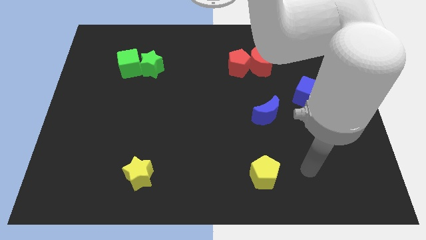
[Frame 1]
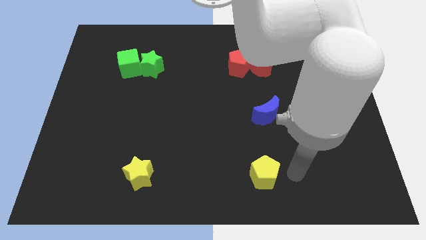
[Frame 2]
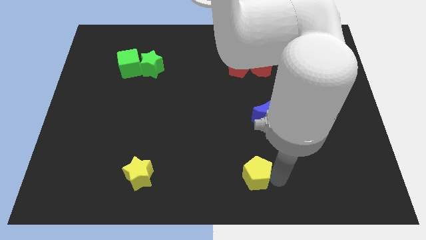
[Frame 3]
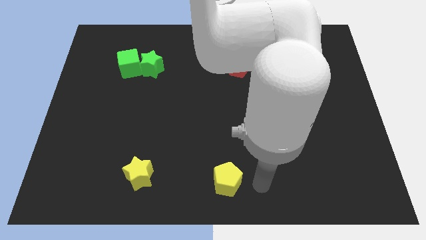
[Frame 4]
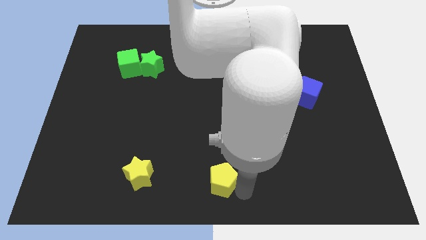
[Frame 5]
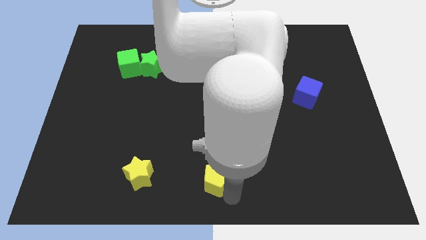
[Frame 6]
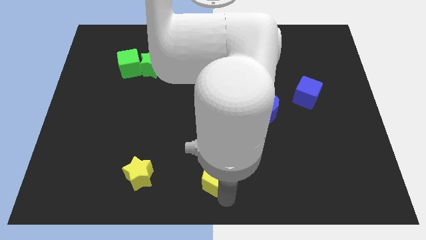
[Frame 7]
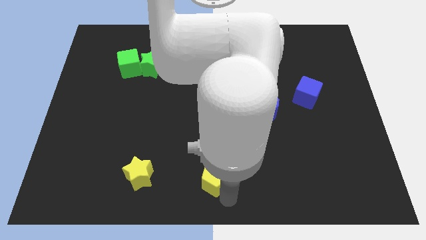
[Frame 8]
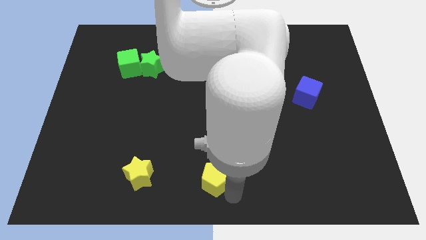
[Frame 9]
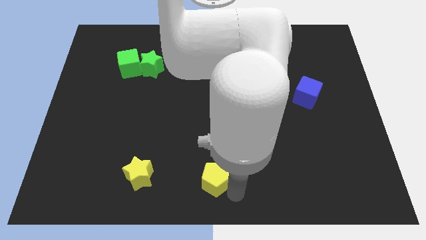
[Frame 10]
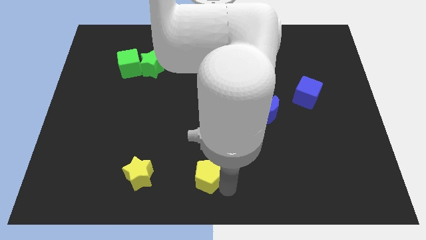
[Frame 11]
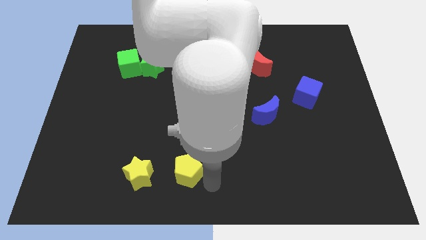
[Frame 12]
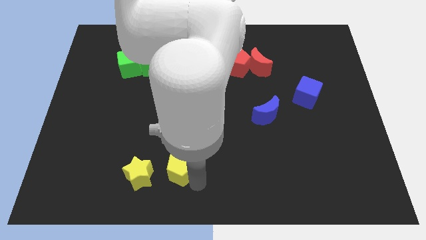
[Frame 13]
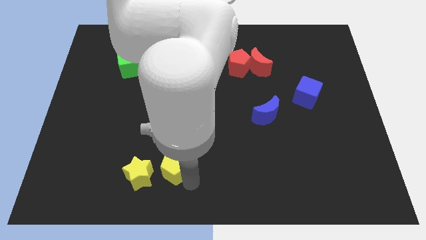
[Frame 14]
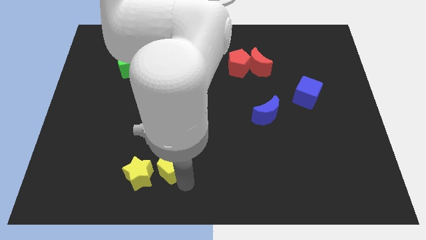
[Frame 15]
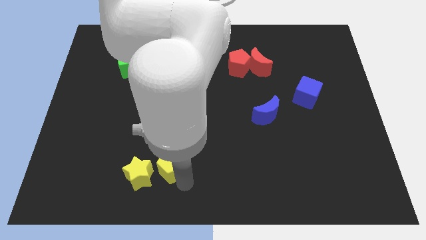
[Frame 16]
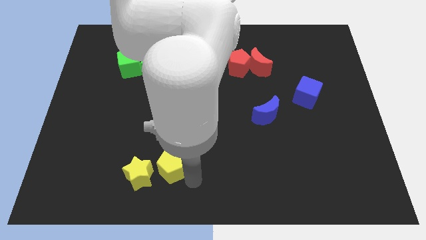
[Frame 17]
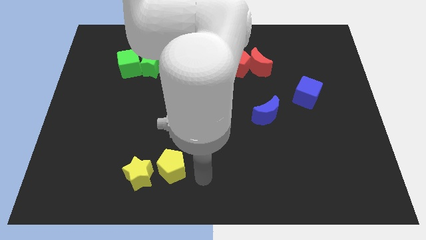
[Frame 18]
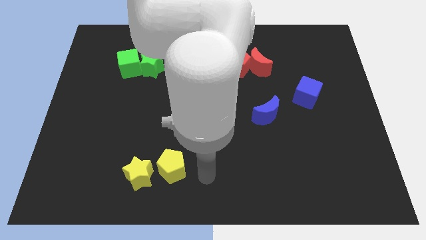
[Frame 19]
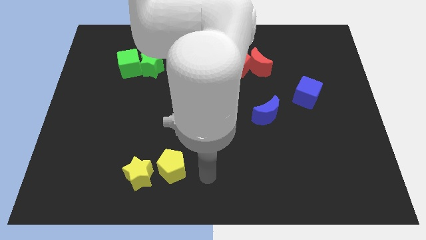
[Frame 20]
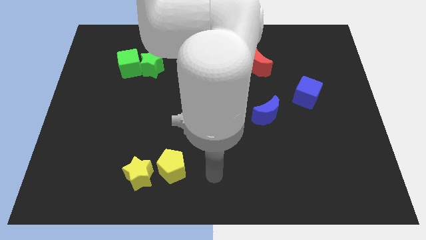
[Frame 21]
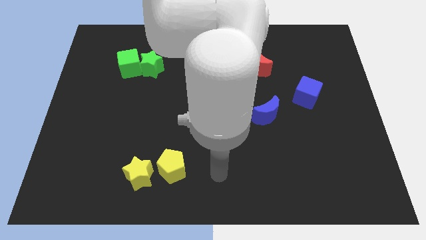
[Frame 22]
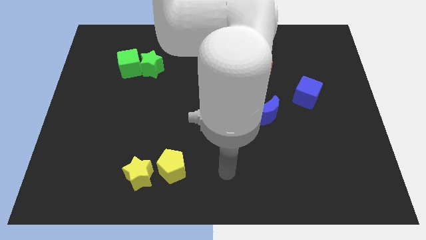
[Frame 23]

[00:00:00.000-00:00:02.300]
push the yellow pentagon close to the yellow star

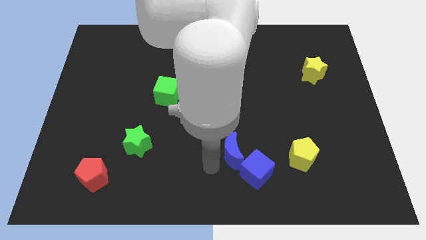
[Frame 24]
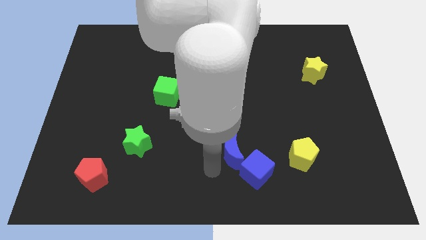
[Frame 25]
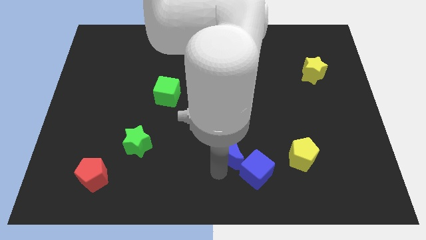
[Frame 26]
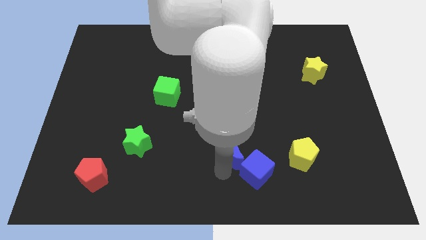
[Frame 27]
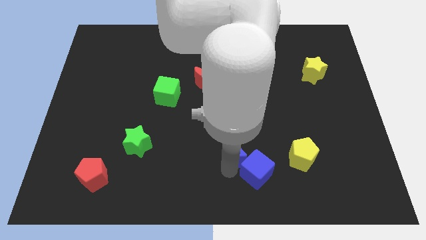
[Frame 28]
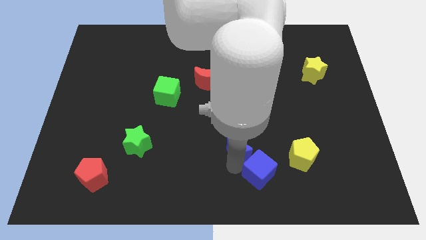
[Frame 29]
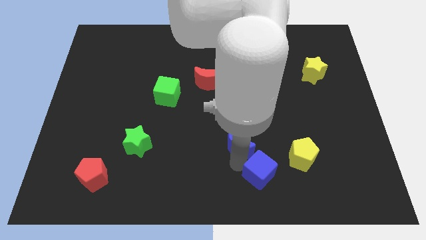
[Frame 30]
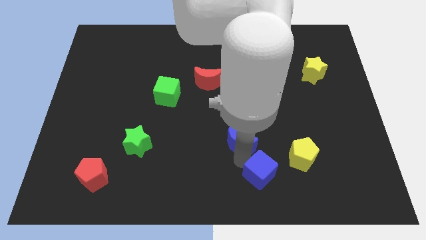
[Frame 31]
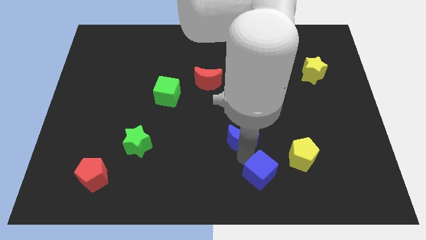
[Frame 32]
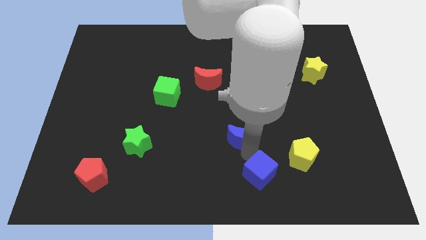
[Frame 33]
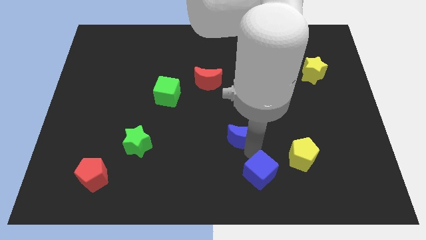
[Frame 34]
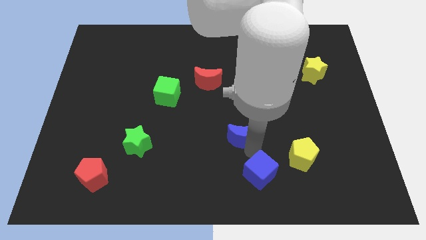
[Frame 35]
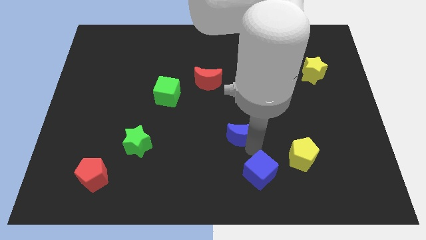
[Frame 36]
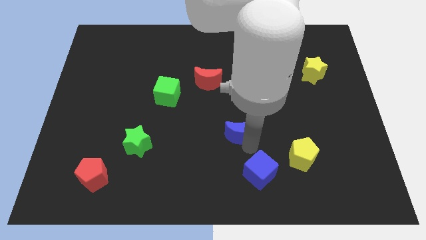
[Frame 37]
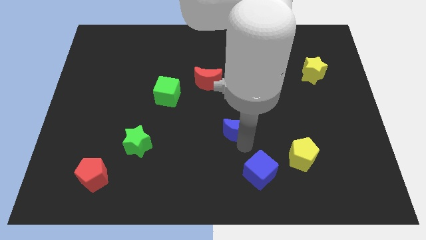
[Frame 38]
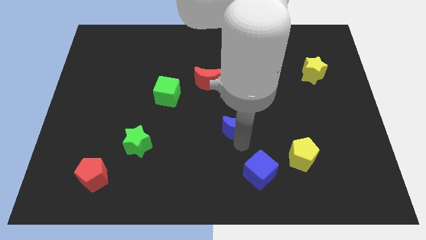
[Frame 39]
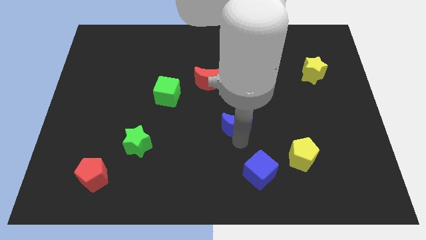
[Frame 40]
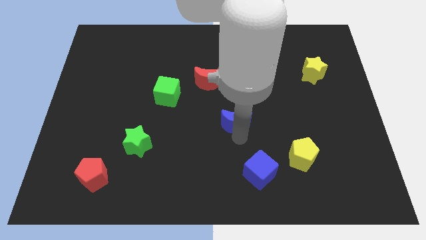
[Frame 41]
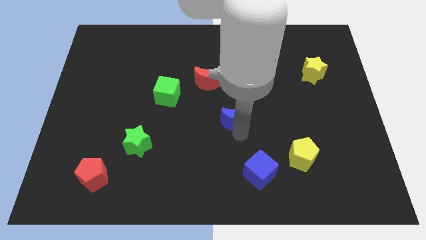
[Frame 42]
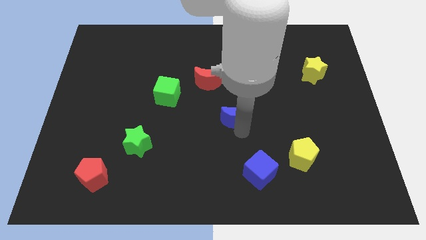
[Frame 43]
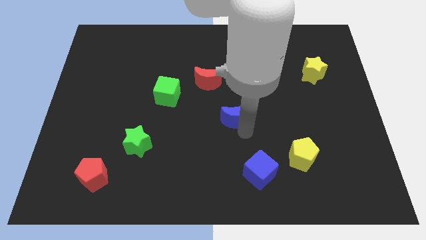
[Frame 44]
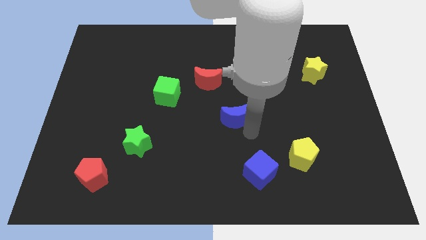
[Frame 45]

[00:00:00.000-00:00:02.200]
seperate blue cube and blue crescent

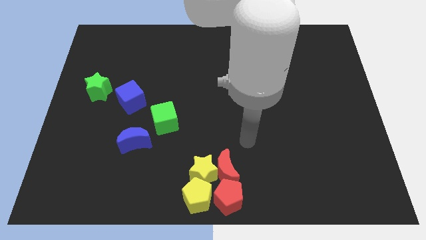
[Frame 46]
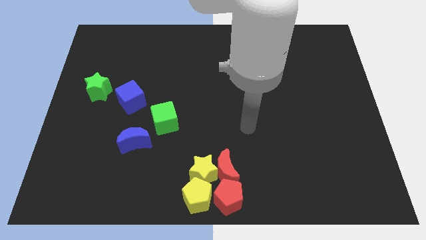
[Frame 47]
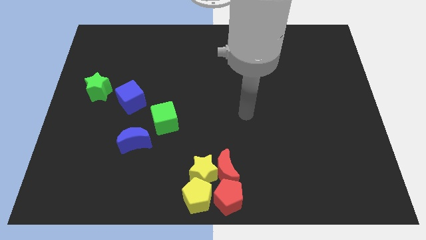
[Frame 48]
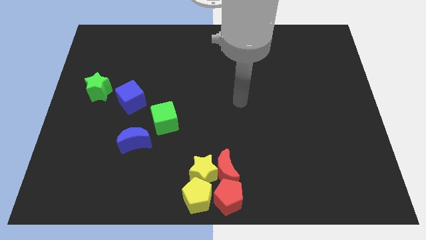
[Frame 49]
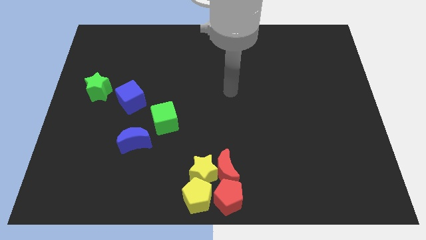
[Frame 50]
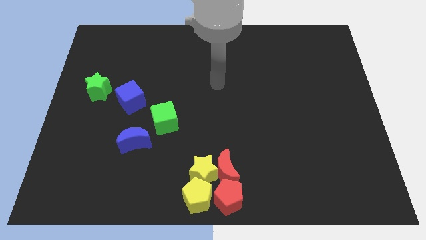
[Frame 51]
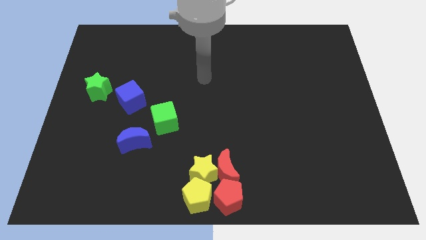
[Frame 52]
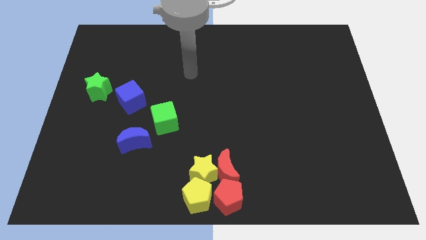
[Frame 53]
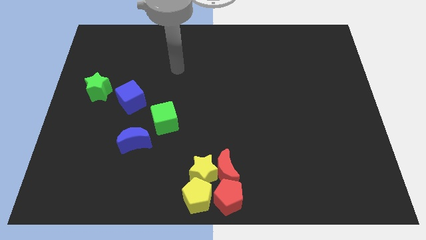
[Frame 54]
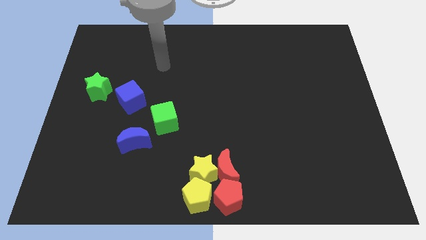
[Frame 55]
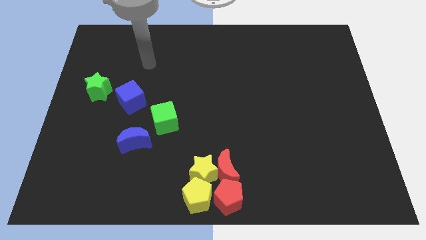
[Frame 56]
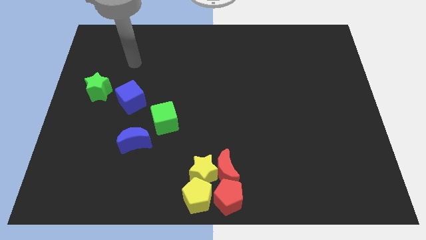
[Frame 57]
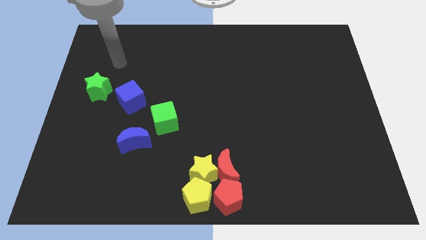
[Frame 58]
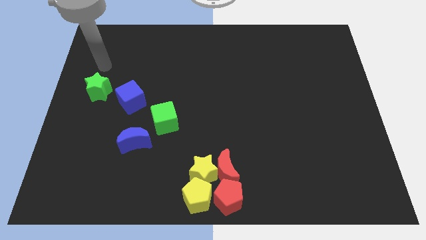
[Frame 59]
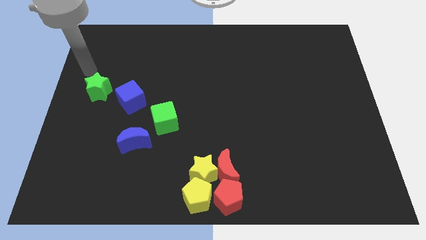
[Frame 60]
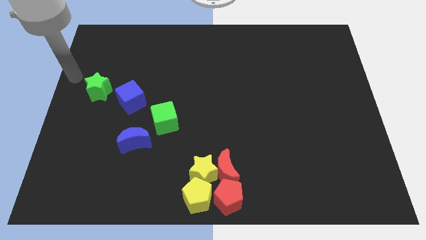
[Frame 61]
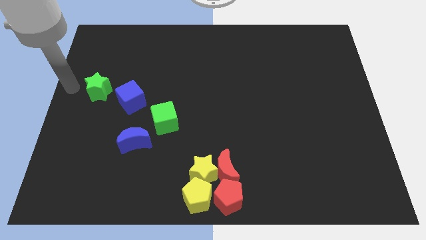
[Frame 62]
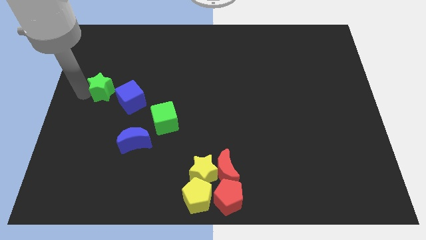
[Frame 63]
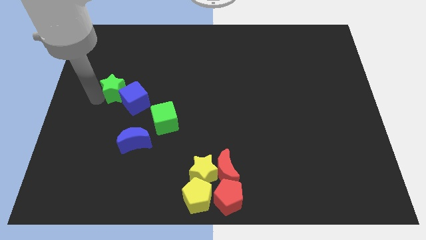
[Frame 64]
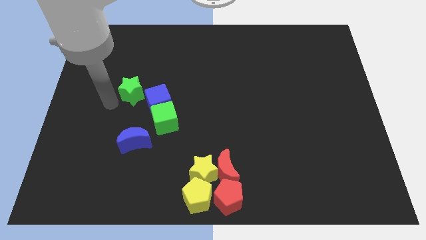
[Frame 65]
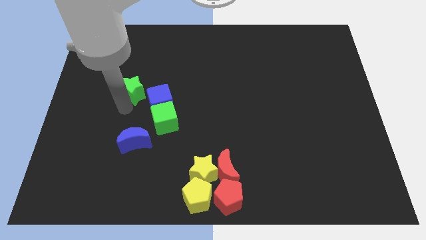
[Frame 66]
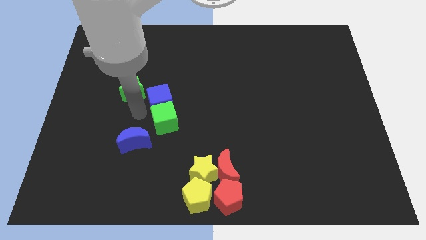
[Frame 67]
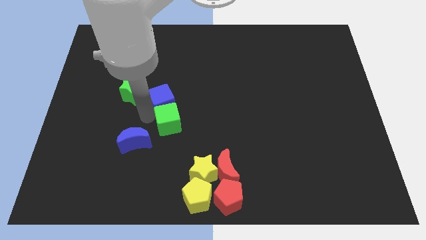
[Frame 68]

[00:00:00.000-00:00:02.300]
point your arm left to green cube

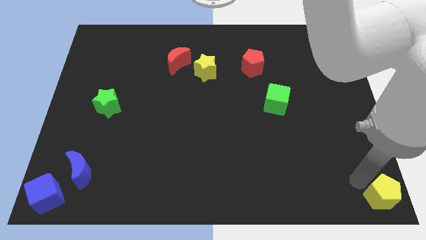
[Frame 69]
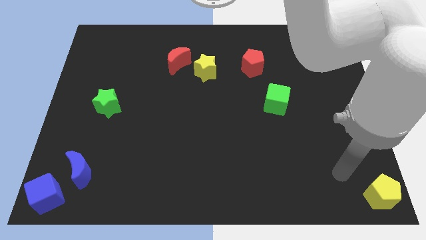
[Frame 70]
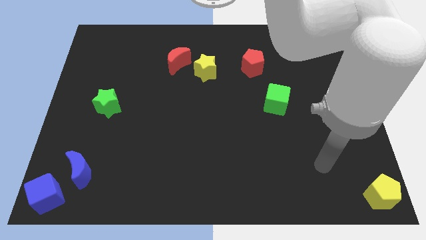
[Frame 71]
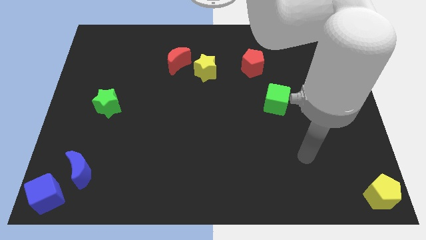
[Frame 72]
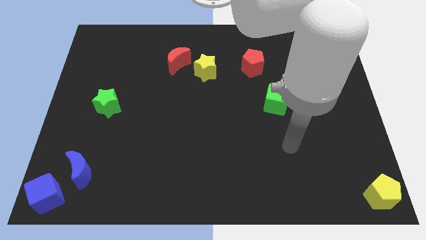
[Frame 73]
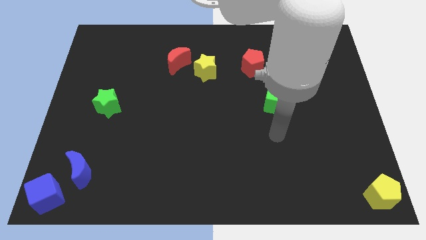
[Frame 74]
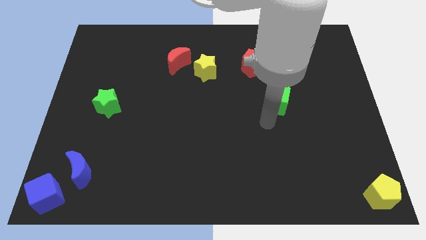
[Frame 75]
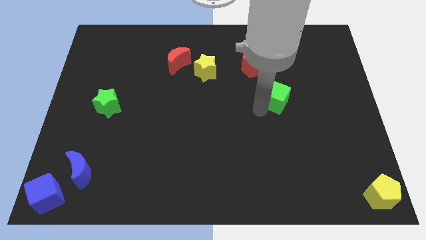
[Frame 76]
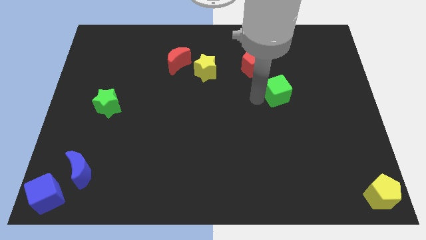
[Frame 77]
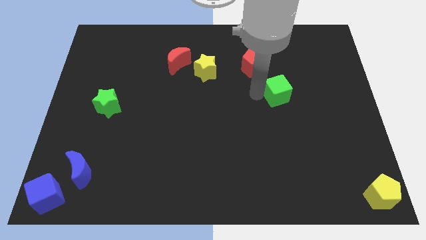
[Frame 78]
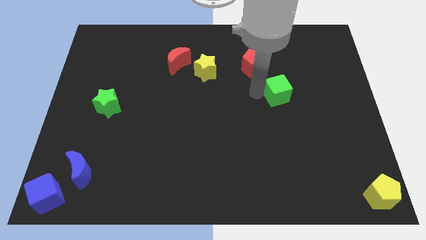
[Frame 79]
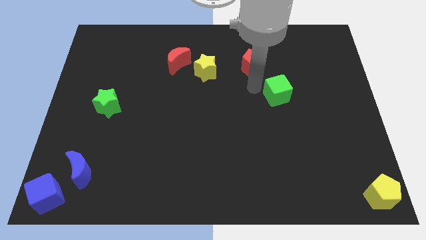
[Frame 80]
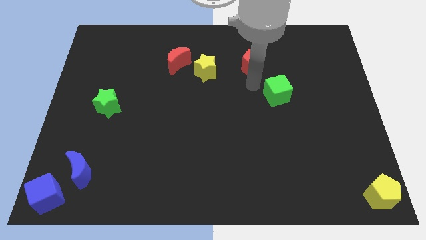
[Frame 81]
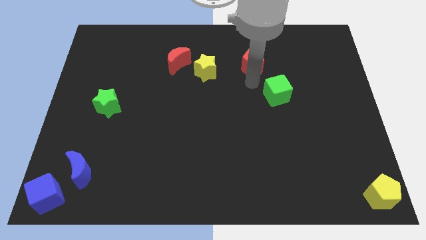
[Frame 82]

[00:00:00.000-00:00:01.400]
slightly touch left to the green cube

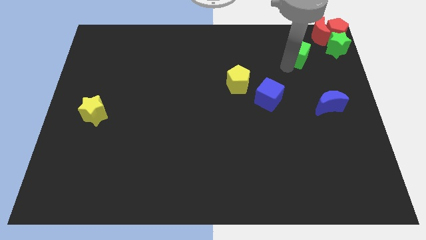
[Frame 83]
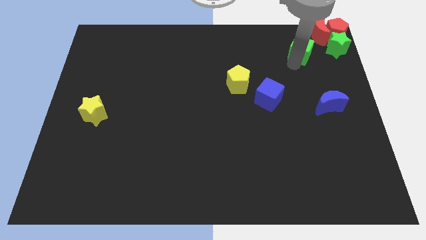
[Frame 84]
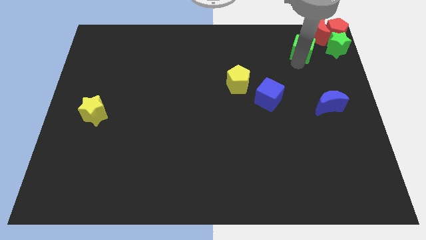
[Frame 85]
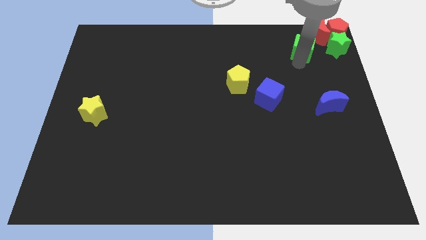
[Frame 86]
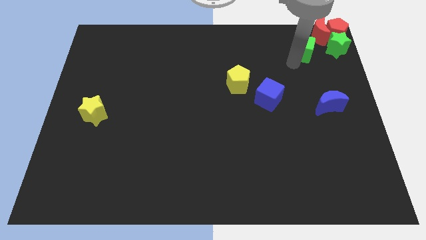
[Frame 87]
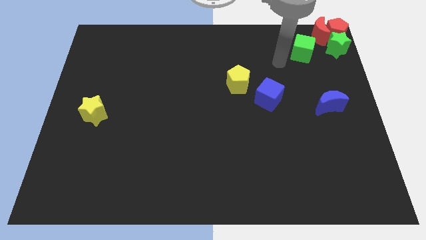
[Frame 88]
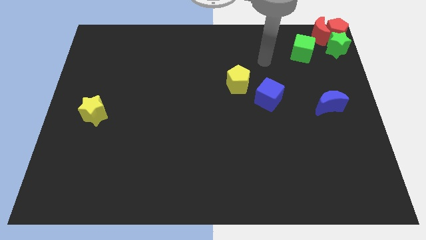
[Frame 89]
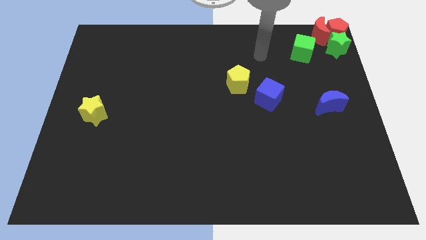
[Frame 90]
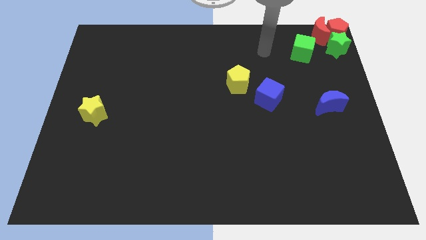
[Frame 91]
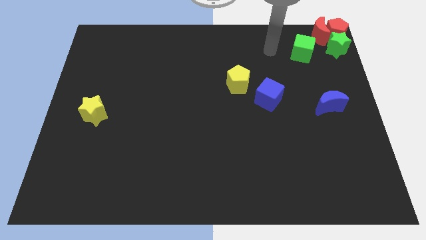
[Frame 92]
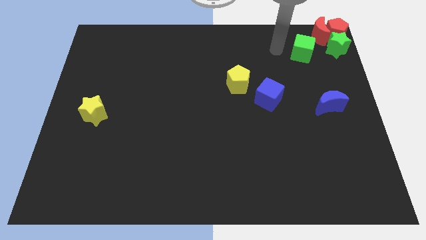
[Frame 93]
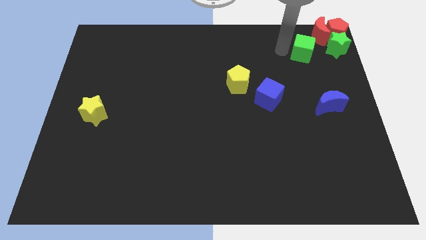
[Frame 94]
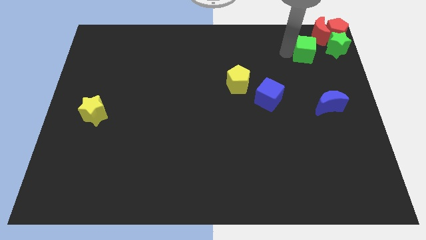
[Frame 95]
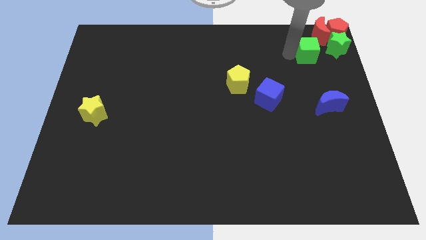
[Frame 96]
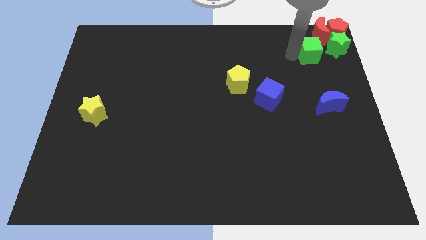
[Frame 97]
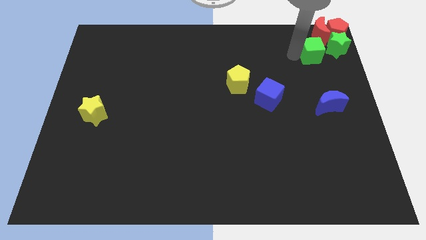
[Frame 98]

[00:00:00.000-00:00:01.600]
push the green cube towards the green star
